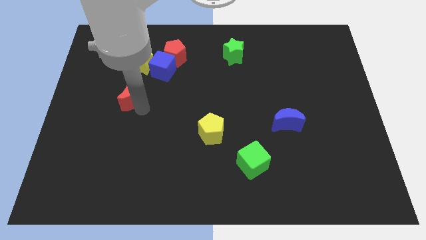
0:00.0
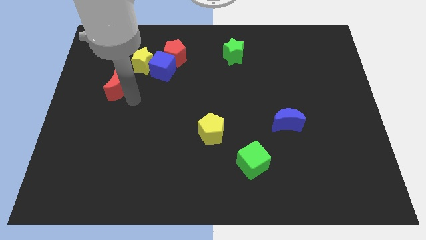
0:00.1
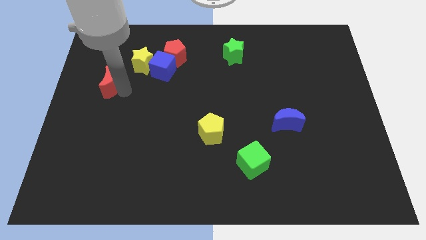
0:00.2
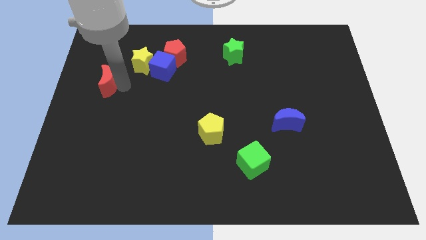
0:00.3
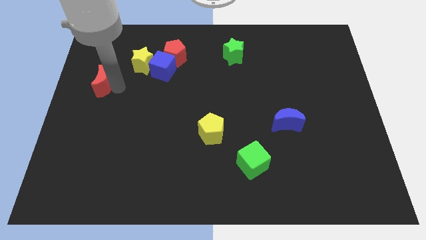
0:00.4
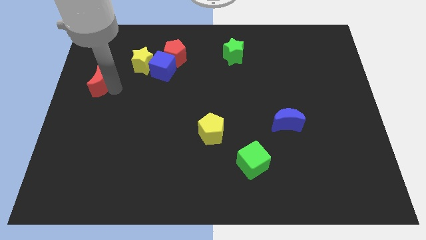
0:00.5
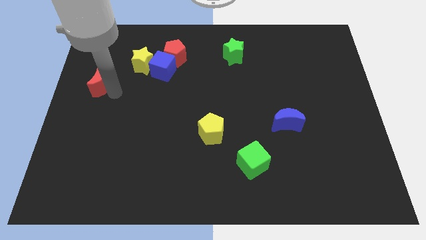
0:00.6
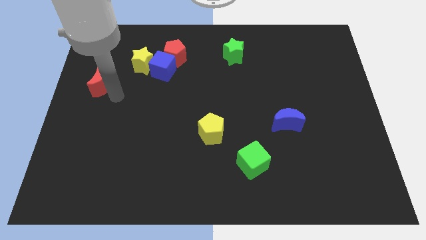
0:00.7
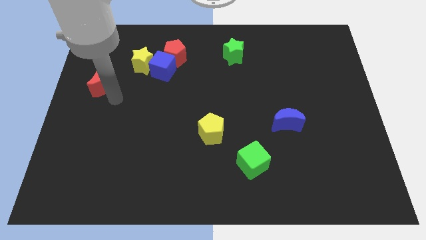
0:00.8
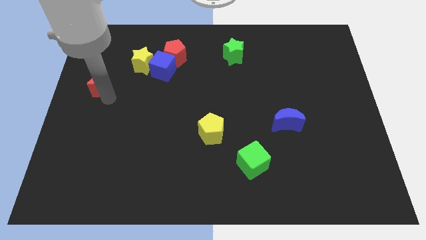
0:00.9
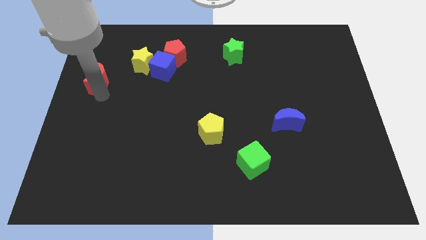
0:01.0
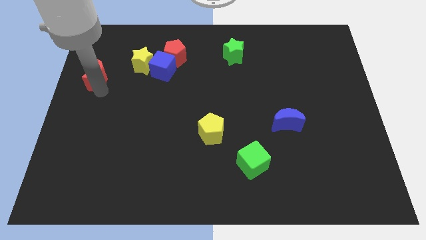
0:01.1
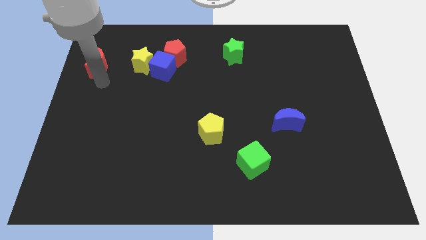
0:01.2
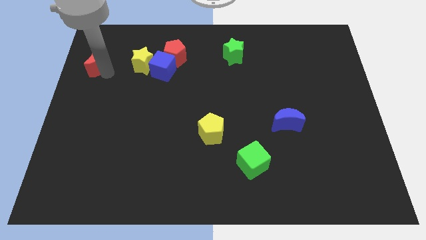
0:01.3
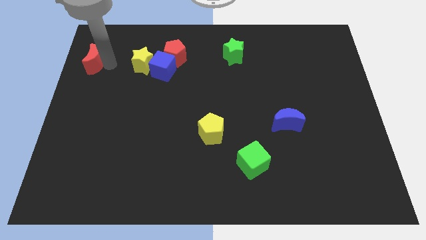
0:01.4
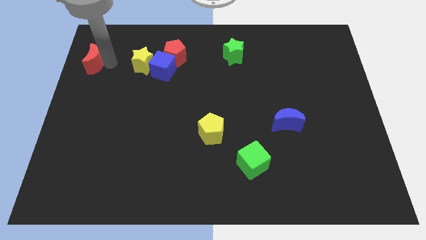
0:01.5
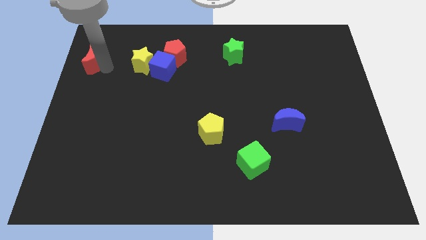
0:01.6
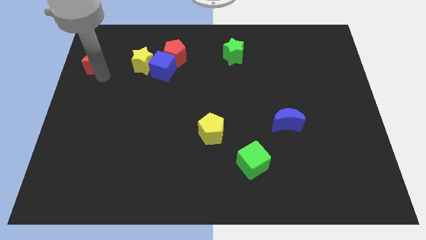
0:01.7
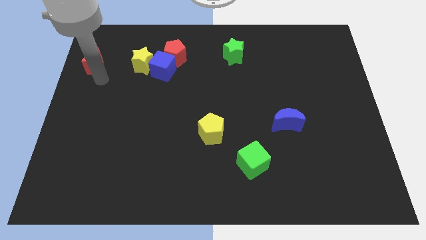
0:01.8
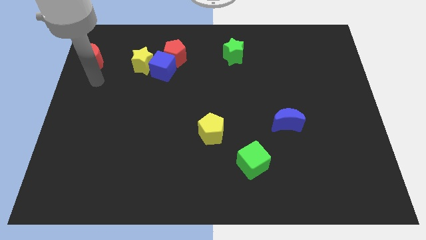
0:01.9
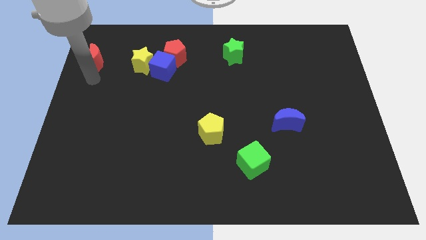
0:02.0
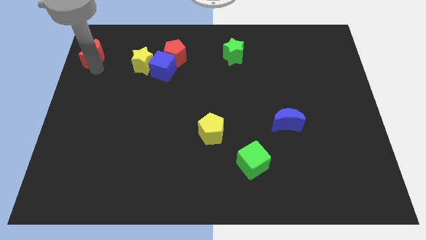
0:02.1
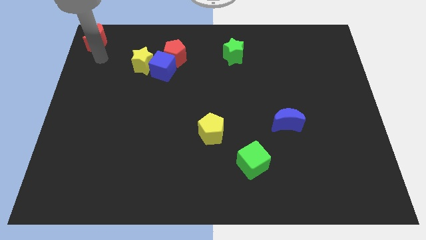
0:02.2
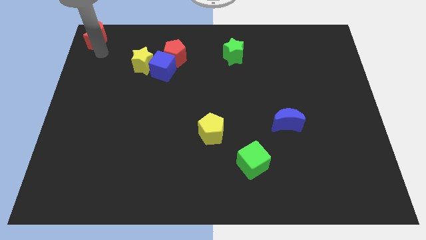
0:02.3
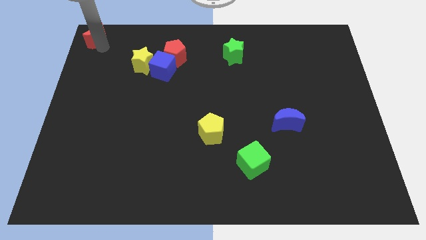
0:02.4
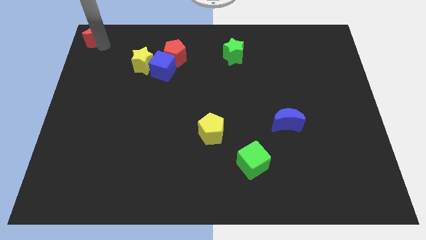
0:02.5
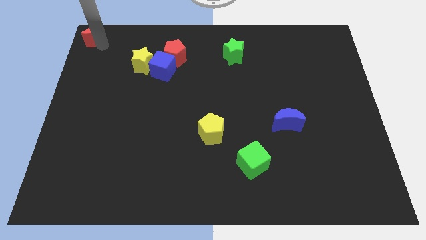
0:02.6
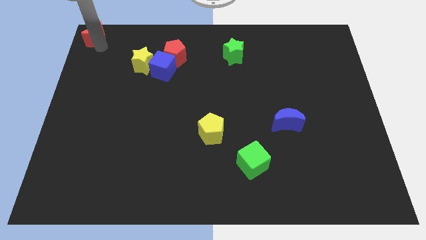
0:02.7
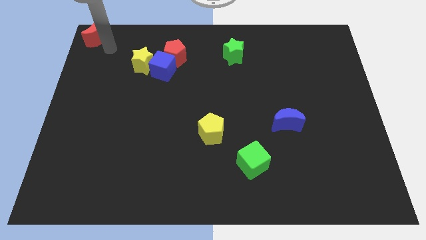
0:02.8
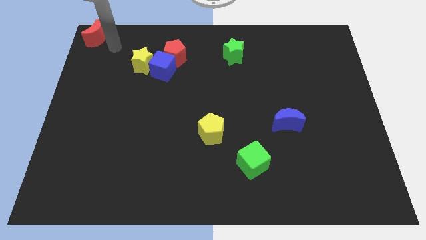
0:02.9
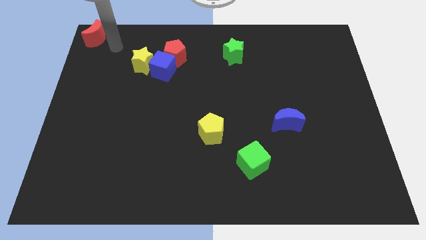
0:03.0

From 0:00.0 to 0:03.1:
place red crescent towards top left corner

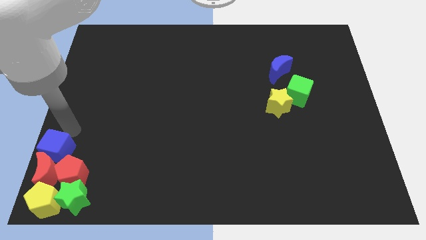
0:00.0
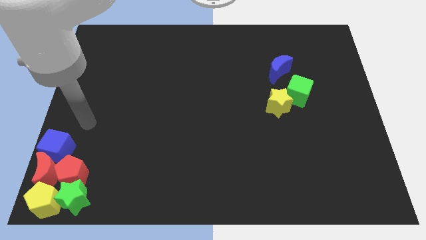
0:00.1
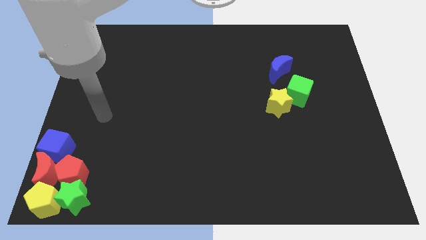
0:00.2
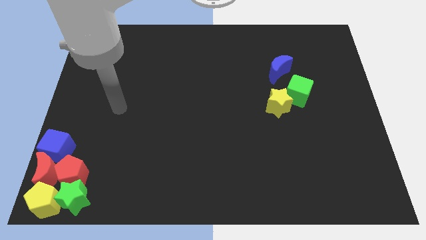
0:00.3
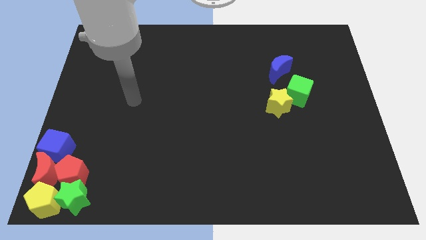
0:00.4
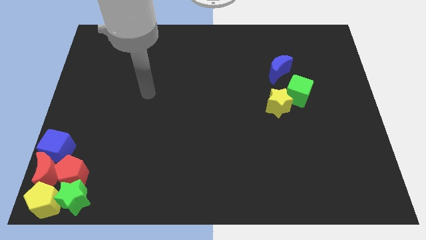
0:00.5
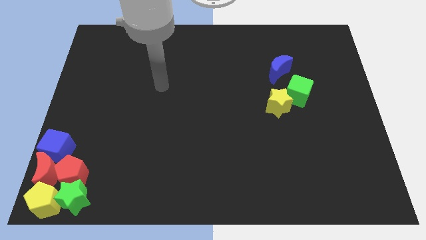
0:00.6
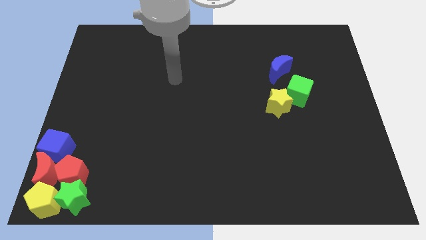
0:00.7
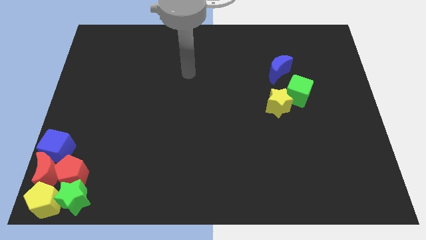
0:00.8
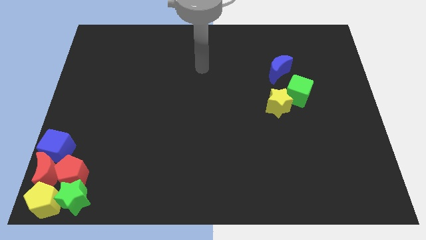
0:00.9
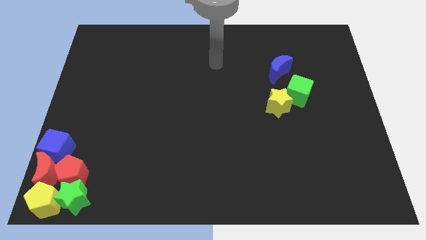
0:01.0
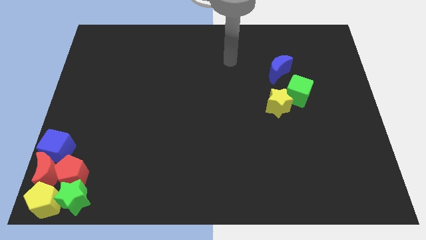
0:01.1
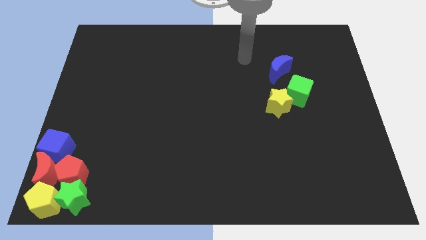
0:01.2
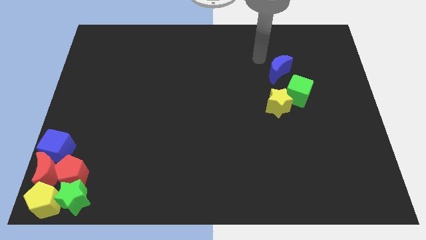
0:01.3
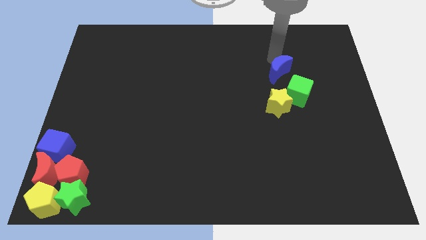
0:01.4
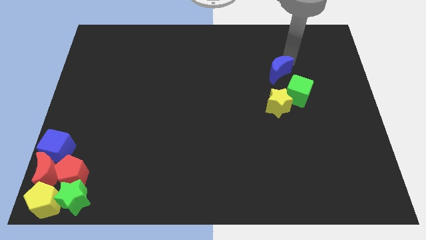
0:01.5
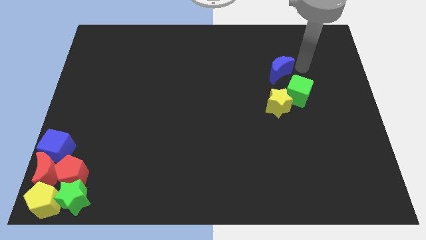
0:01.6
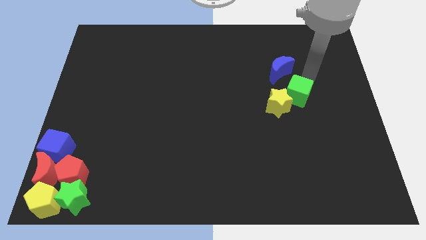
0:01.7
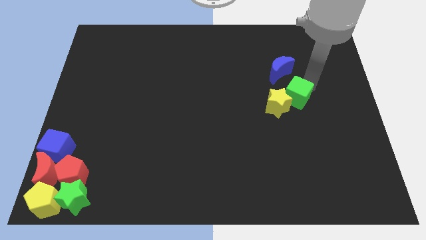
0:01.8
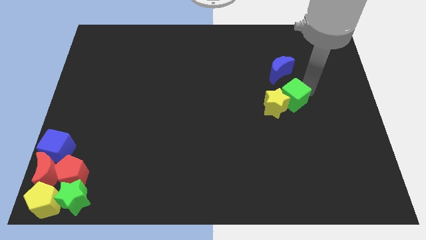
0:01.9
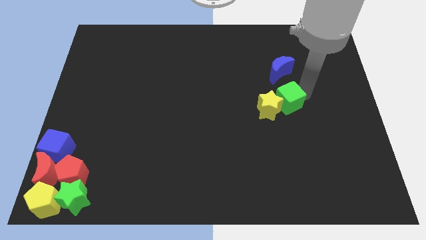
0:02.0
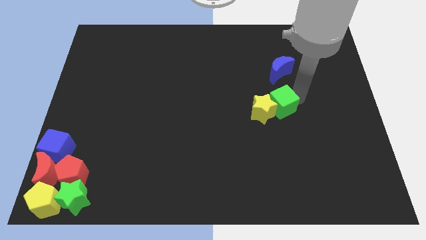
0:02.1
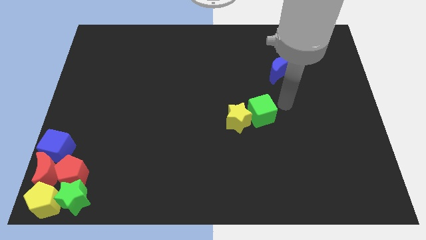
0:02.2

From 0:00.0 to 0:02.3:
push the green cube along with yellow star towards to the right of the blue cube

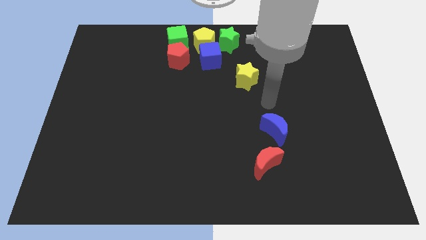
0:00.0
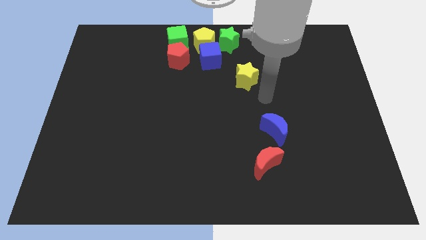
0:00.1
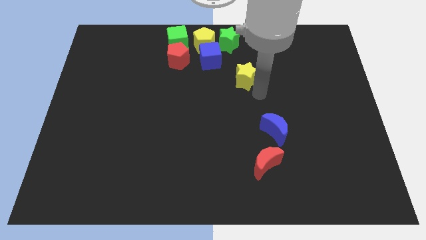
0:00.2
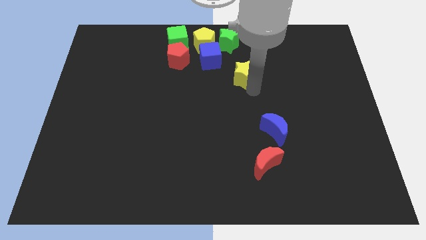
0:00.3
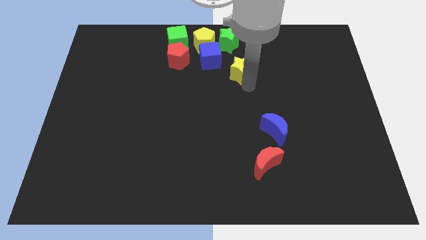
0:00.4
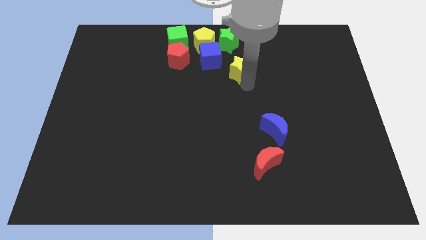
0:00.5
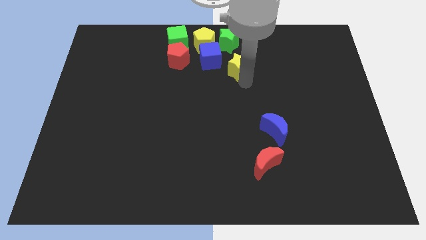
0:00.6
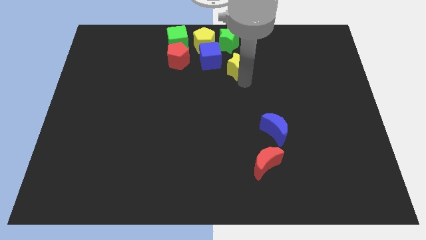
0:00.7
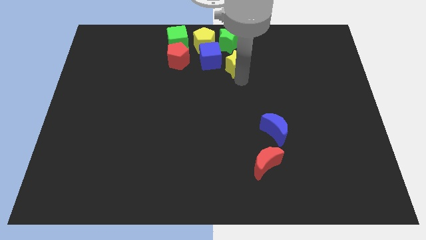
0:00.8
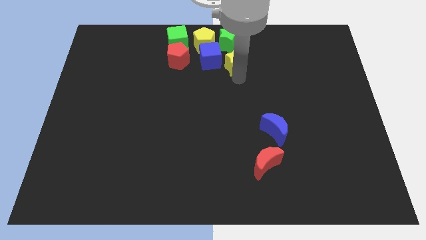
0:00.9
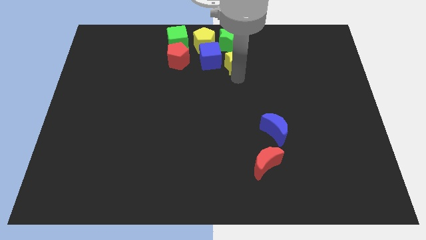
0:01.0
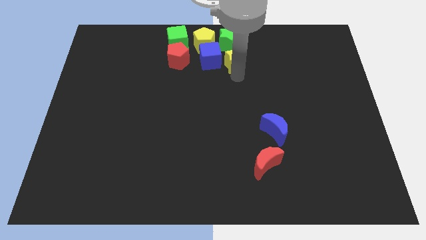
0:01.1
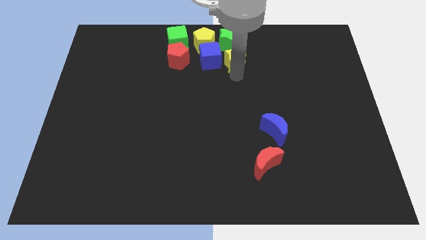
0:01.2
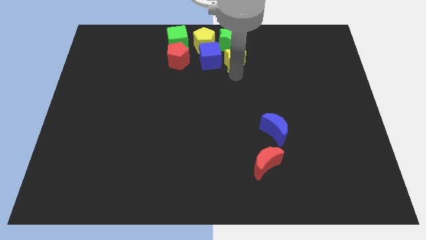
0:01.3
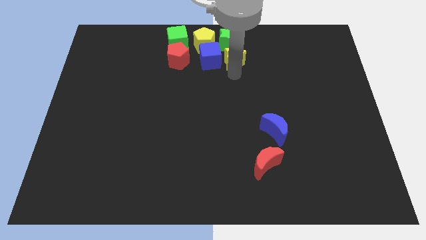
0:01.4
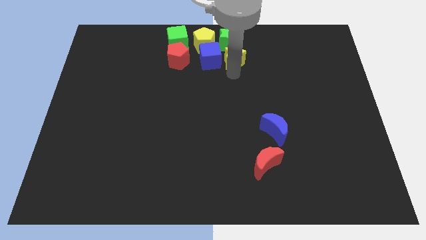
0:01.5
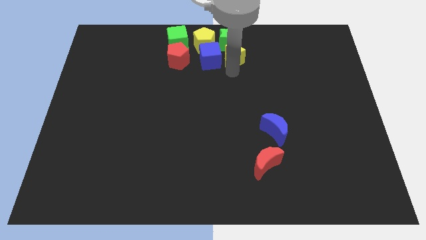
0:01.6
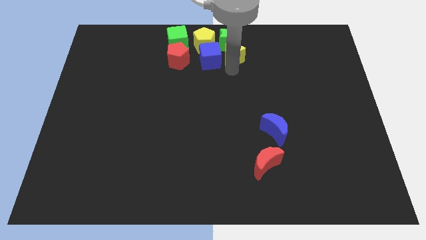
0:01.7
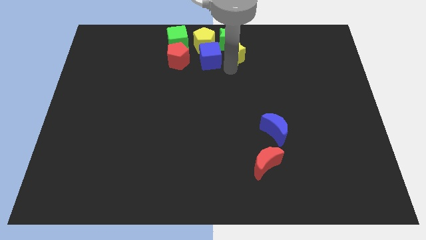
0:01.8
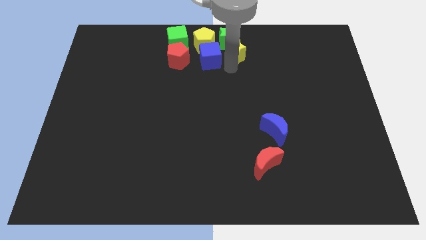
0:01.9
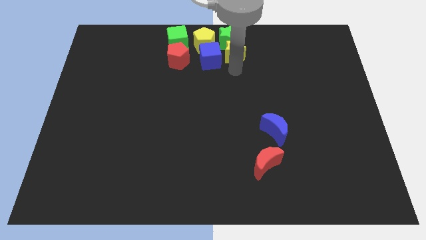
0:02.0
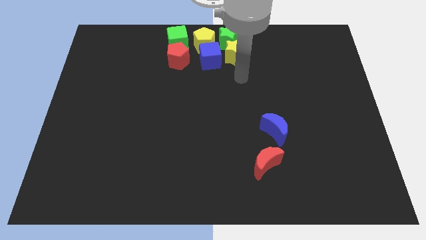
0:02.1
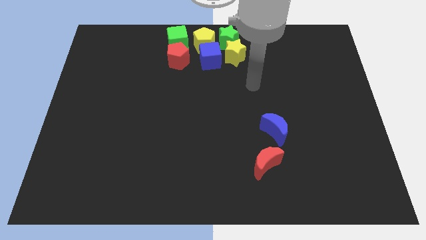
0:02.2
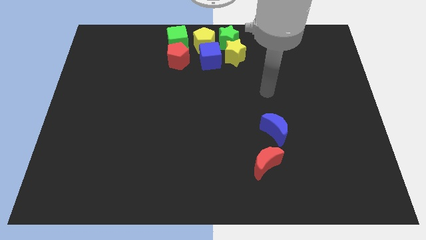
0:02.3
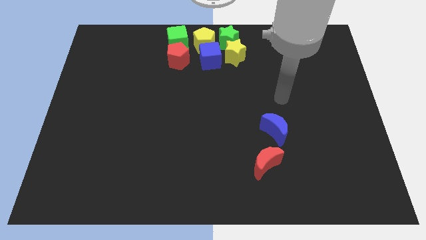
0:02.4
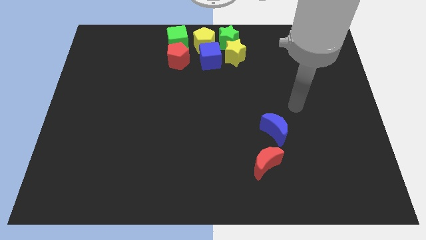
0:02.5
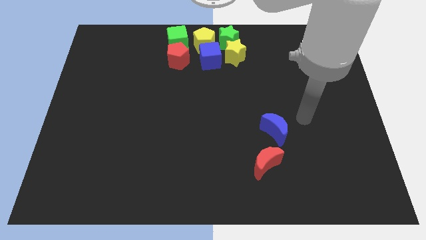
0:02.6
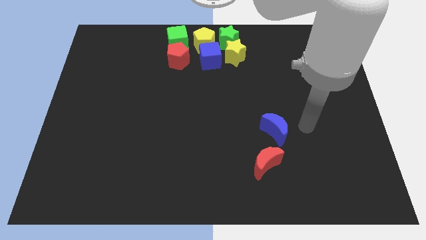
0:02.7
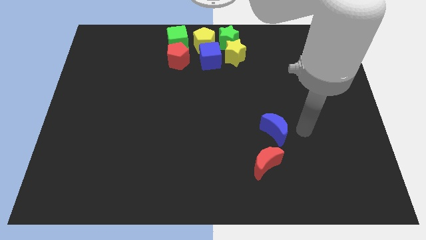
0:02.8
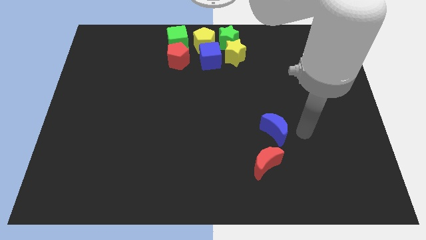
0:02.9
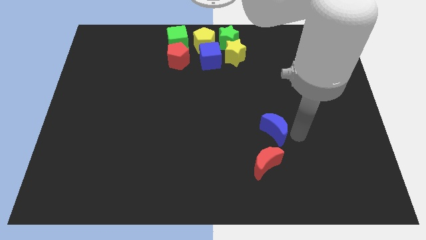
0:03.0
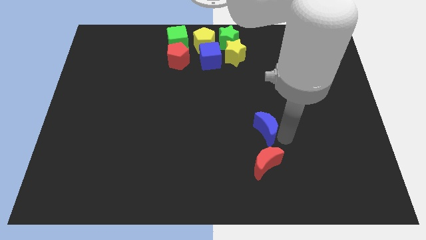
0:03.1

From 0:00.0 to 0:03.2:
put the yellow star to the bottom right side of the green star

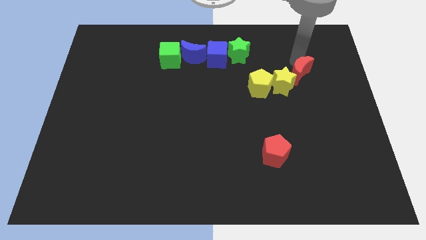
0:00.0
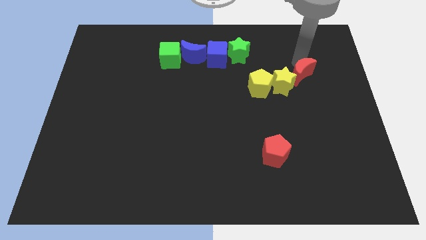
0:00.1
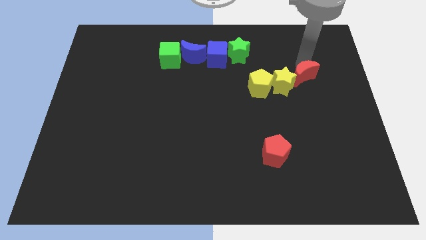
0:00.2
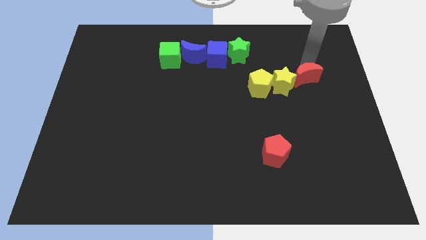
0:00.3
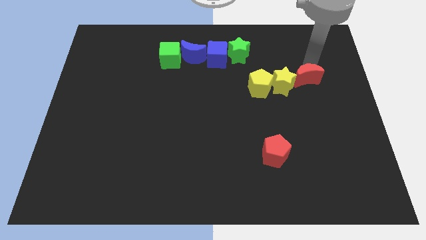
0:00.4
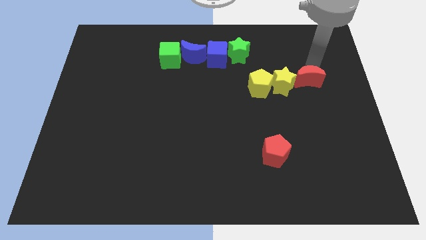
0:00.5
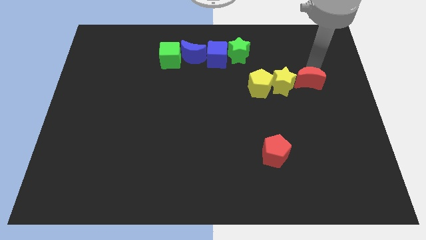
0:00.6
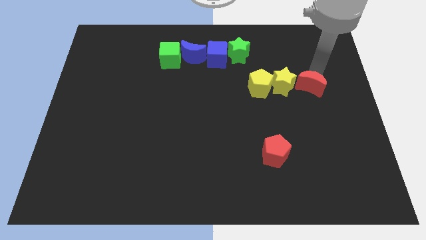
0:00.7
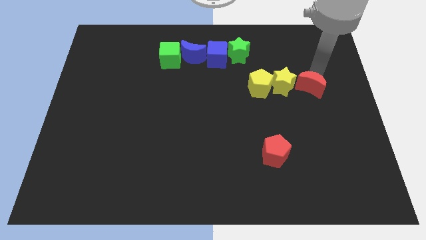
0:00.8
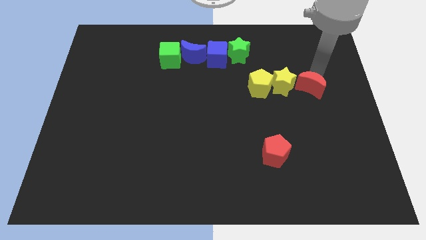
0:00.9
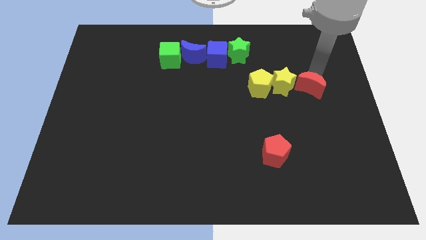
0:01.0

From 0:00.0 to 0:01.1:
push the red crescent to the right of the yellow star
